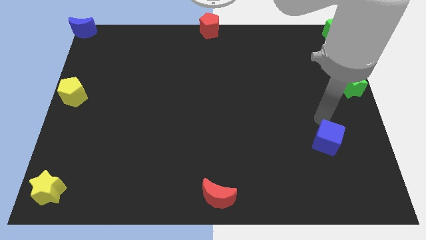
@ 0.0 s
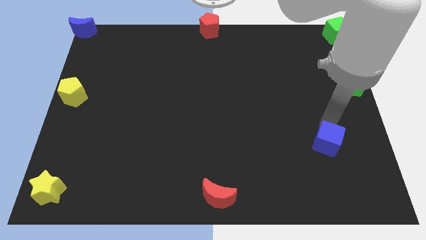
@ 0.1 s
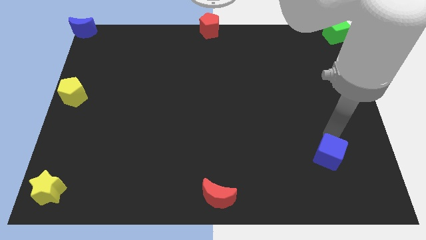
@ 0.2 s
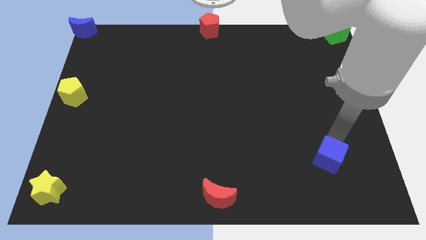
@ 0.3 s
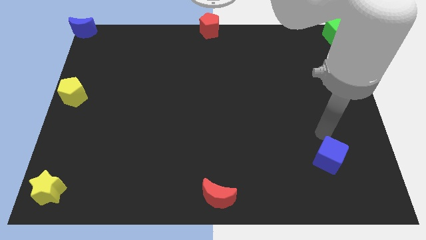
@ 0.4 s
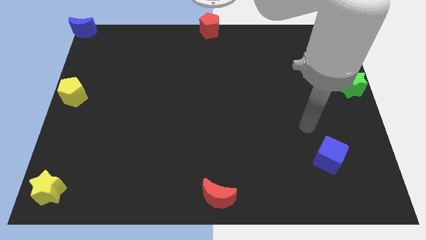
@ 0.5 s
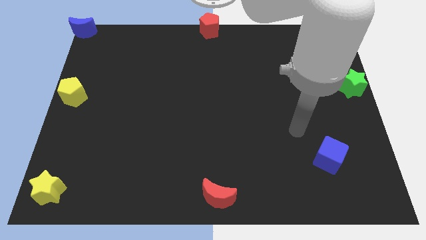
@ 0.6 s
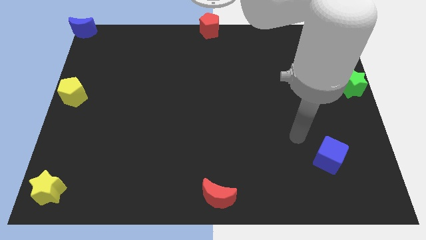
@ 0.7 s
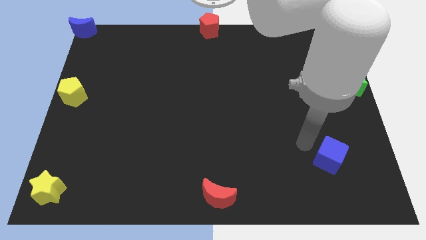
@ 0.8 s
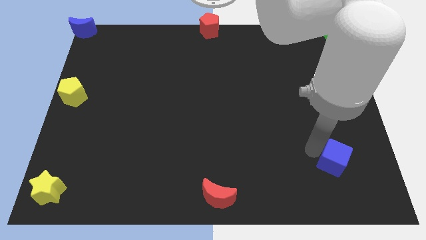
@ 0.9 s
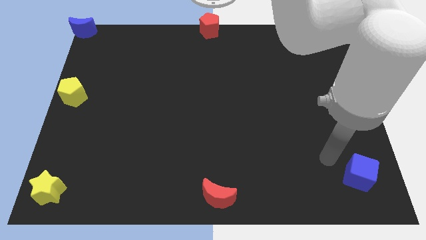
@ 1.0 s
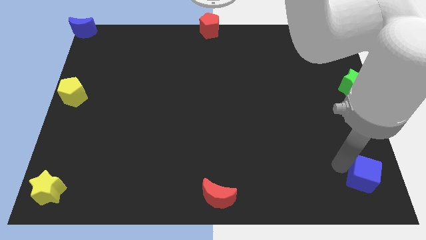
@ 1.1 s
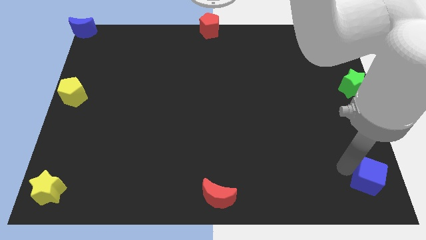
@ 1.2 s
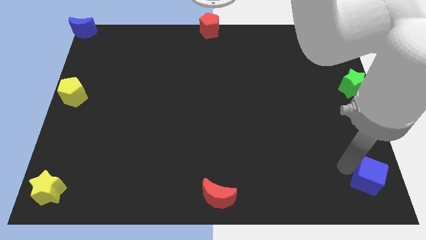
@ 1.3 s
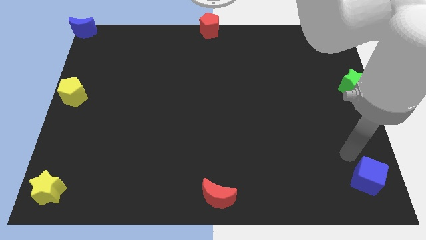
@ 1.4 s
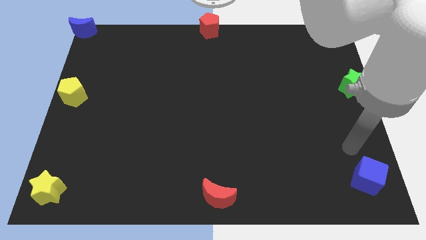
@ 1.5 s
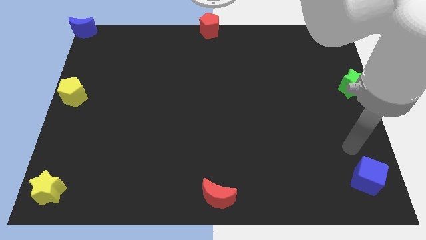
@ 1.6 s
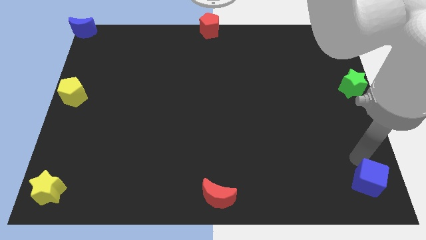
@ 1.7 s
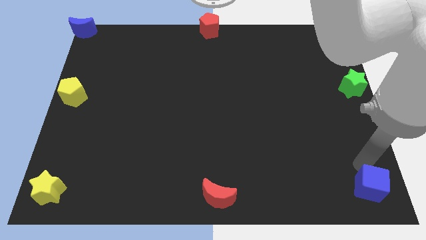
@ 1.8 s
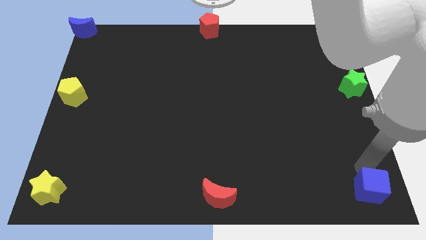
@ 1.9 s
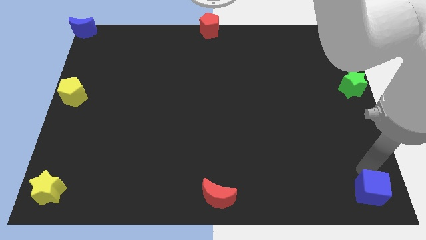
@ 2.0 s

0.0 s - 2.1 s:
move the blue cube to the bottom right corner of the board

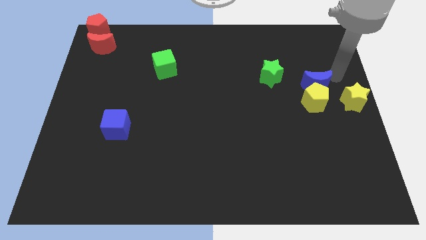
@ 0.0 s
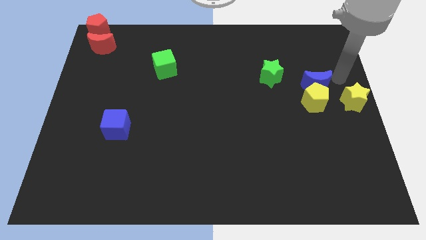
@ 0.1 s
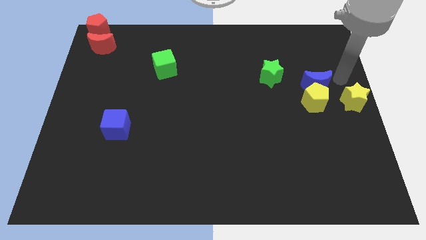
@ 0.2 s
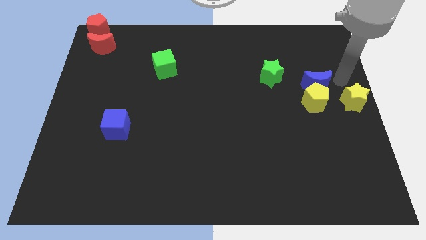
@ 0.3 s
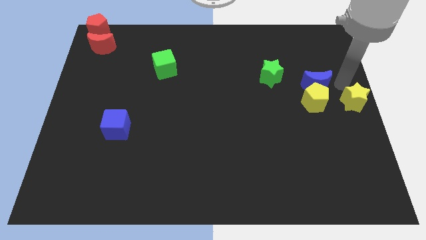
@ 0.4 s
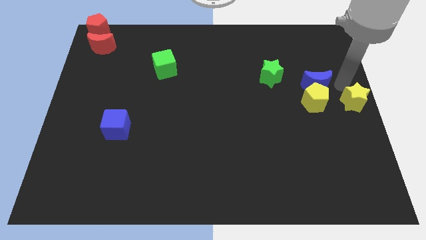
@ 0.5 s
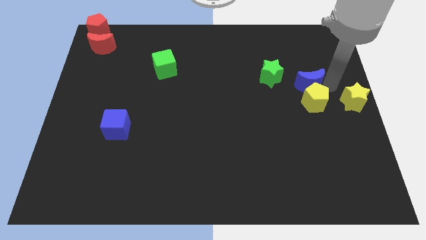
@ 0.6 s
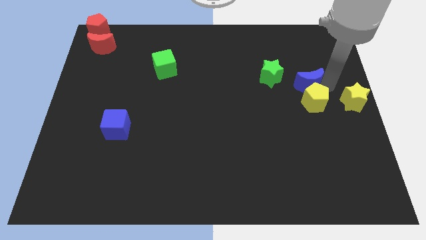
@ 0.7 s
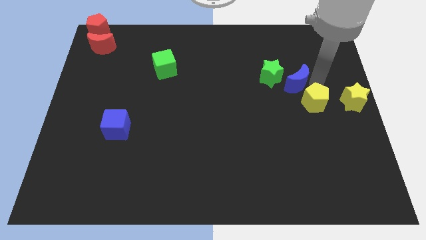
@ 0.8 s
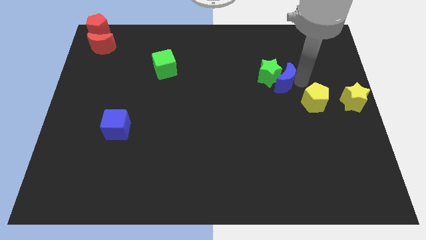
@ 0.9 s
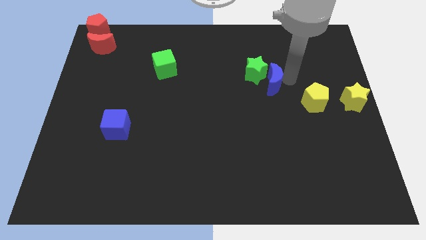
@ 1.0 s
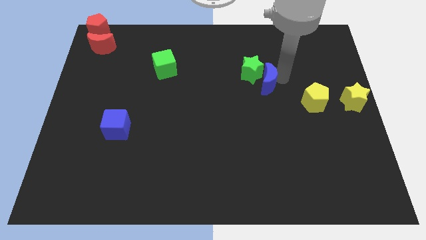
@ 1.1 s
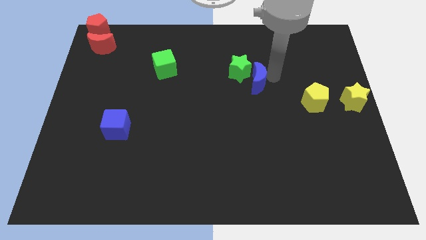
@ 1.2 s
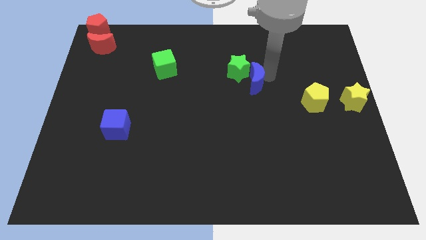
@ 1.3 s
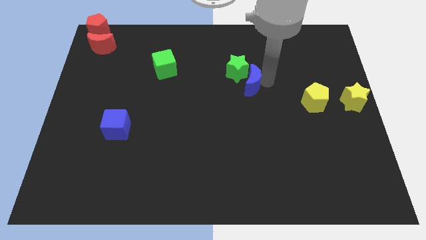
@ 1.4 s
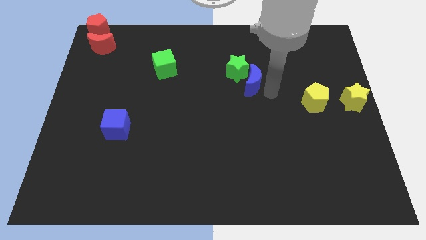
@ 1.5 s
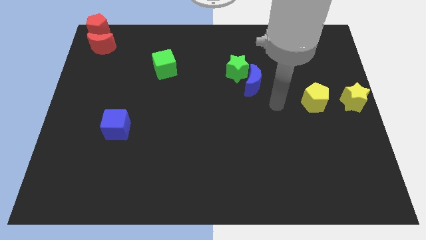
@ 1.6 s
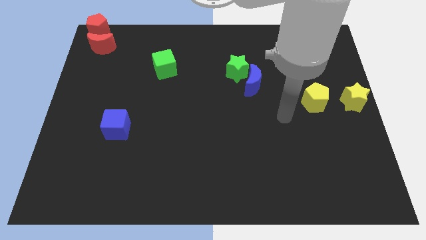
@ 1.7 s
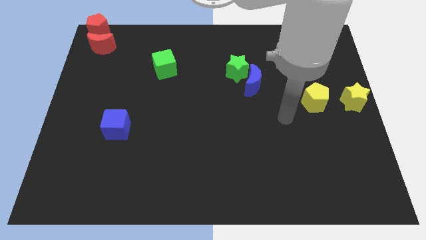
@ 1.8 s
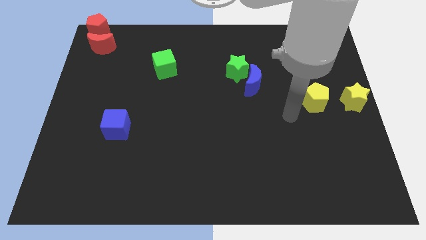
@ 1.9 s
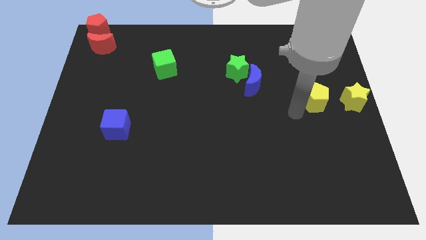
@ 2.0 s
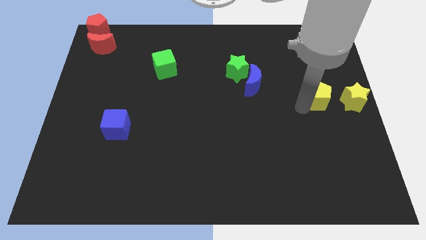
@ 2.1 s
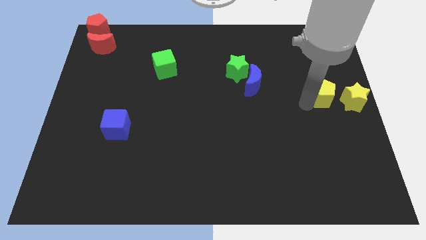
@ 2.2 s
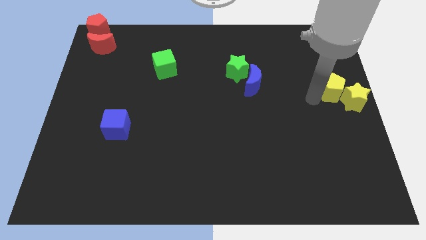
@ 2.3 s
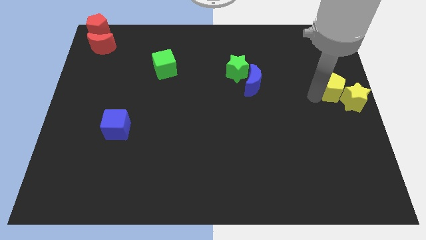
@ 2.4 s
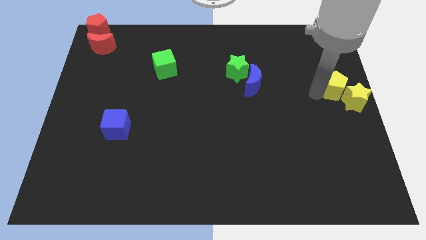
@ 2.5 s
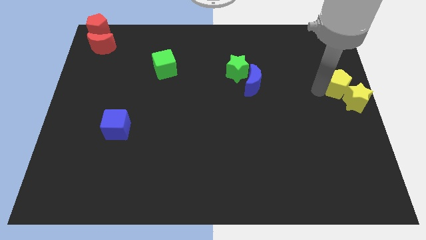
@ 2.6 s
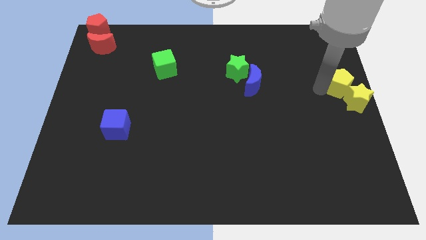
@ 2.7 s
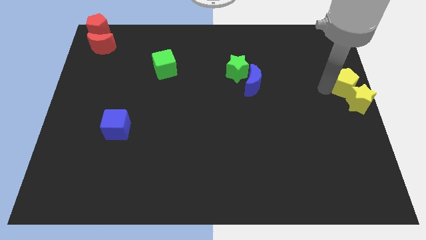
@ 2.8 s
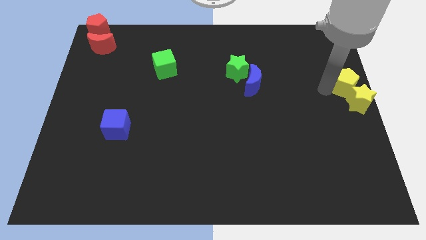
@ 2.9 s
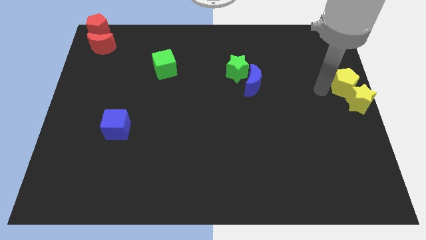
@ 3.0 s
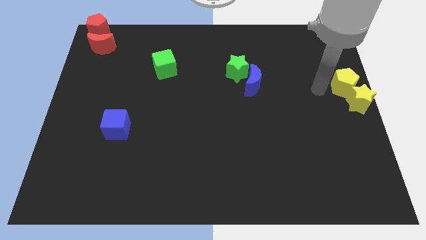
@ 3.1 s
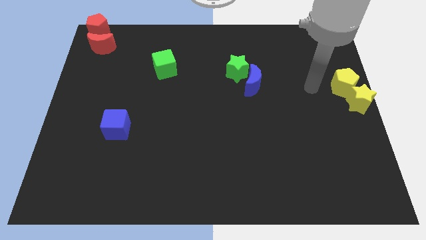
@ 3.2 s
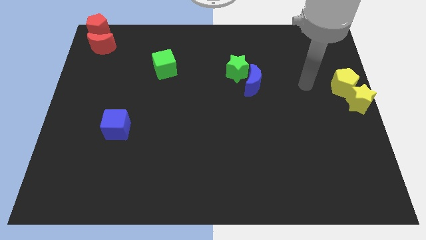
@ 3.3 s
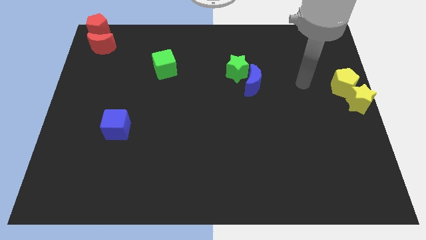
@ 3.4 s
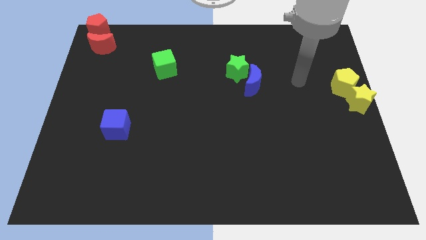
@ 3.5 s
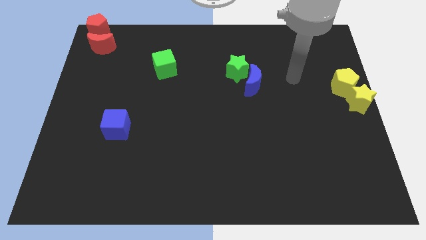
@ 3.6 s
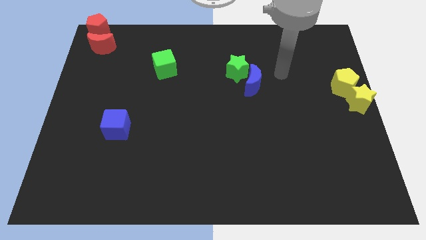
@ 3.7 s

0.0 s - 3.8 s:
push yellow pentagon into yellow star

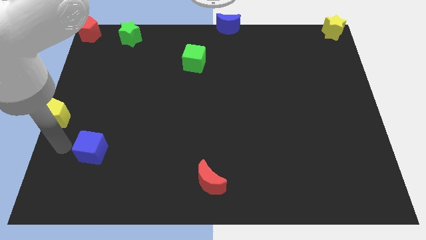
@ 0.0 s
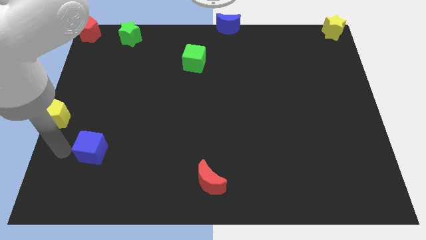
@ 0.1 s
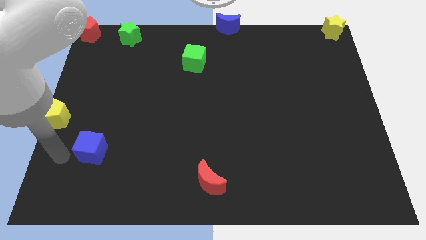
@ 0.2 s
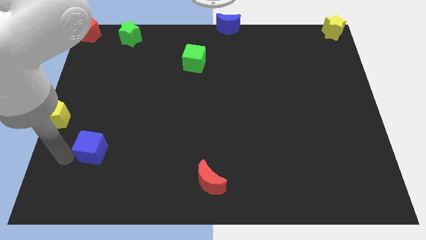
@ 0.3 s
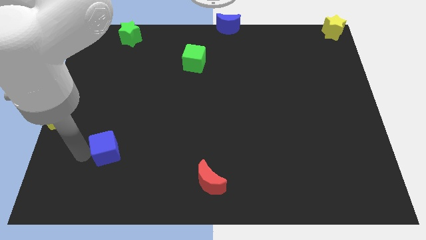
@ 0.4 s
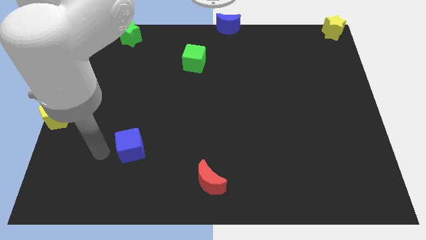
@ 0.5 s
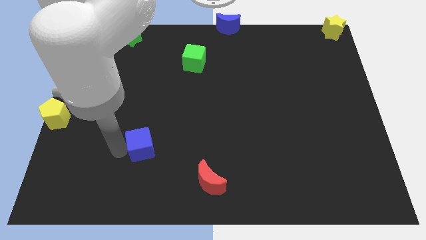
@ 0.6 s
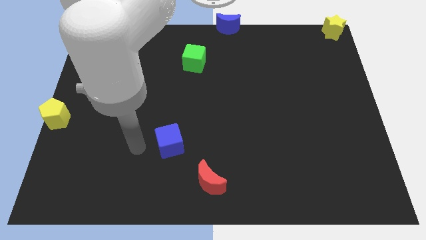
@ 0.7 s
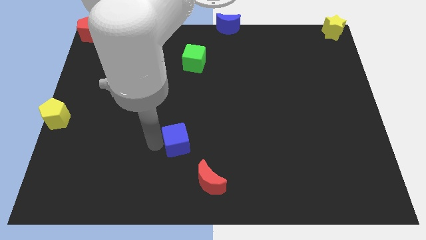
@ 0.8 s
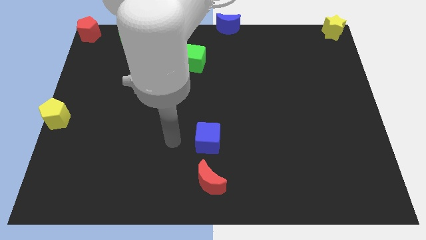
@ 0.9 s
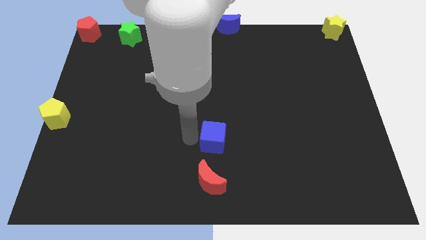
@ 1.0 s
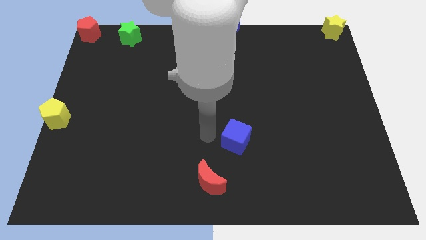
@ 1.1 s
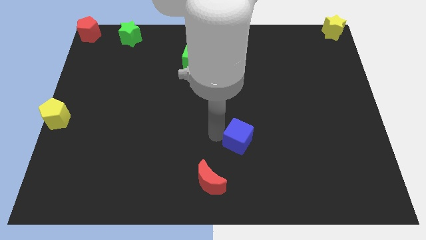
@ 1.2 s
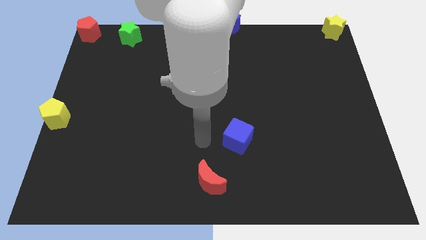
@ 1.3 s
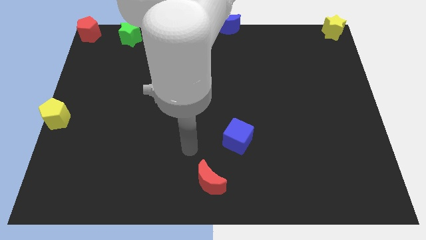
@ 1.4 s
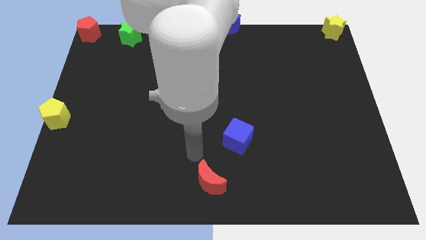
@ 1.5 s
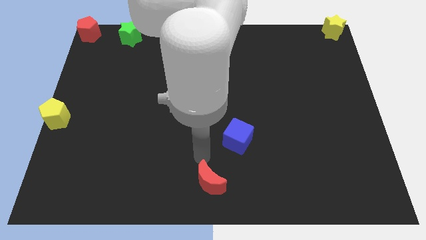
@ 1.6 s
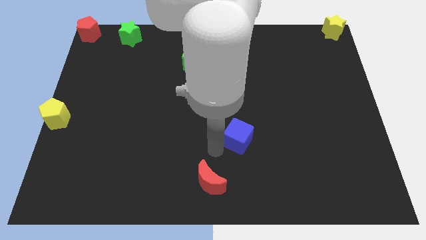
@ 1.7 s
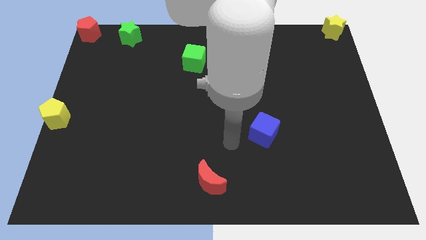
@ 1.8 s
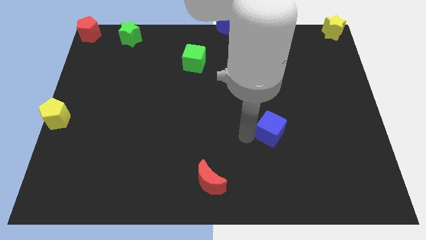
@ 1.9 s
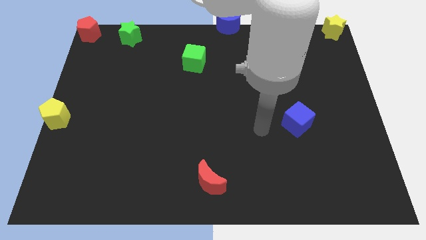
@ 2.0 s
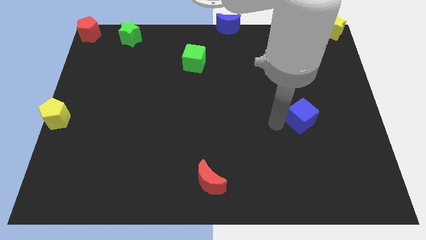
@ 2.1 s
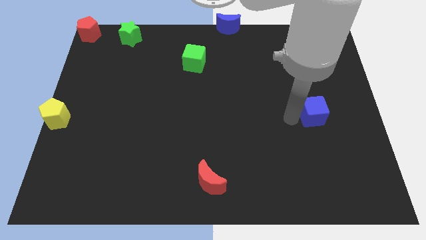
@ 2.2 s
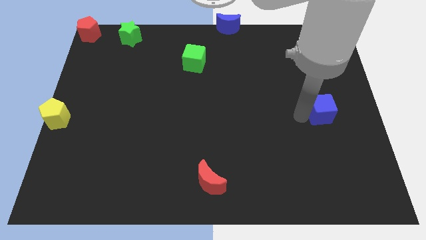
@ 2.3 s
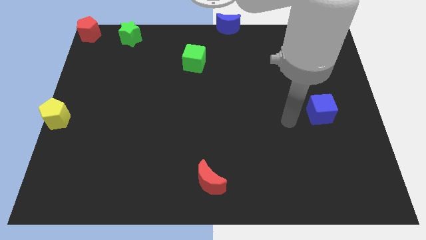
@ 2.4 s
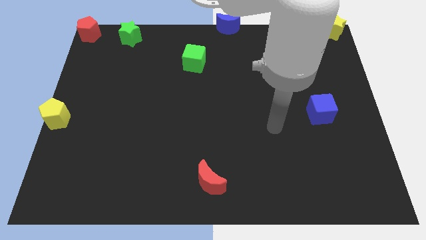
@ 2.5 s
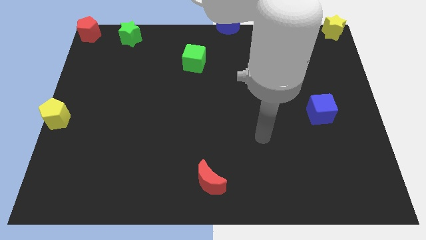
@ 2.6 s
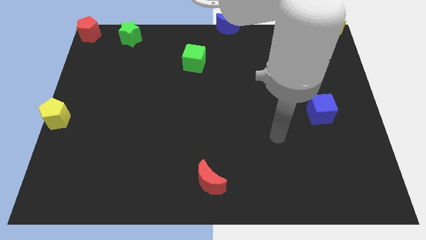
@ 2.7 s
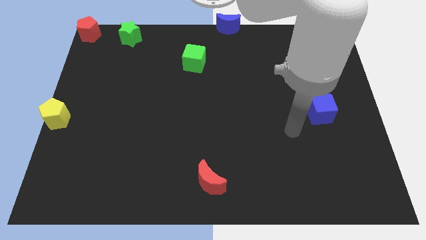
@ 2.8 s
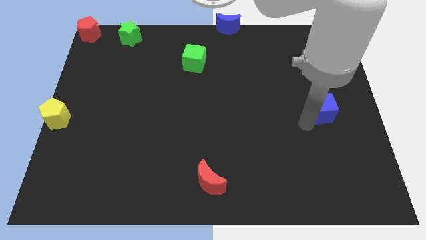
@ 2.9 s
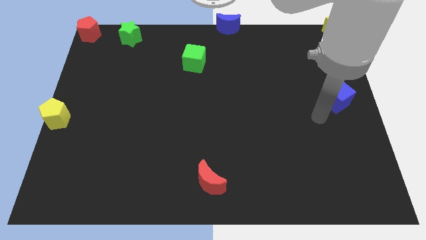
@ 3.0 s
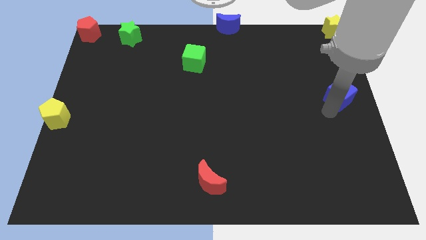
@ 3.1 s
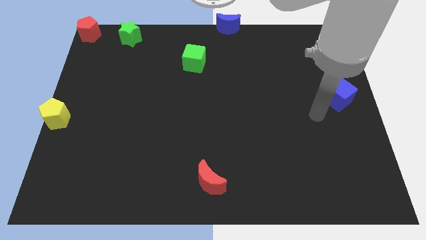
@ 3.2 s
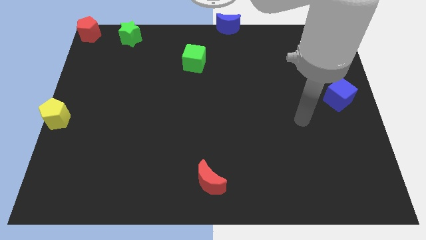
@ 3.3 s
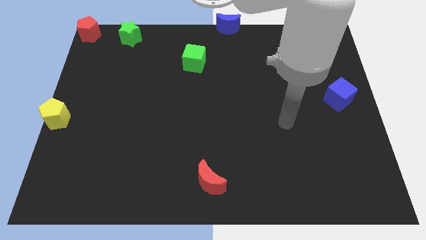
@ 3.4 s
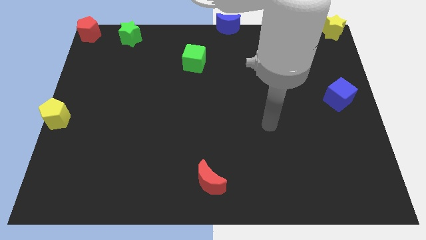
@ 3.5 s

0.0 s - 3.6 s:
move the blue cube towards the center right
